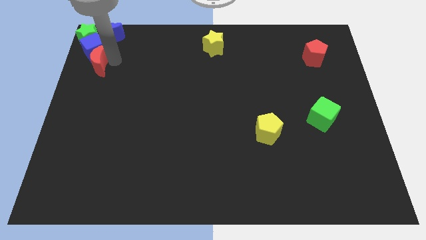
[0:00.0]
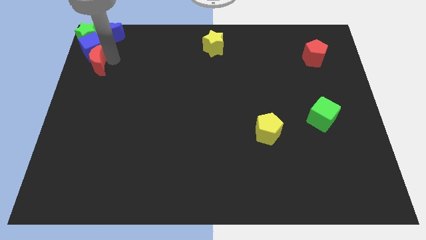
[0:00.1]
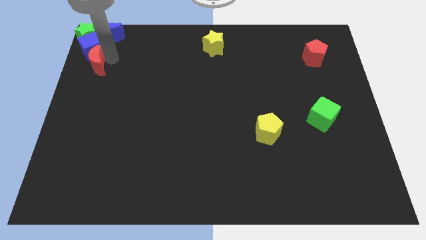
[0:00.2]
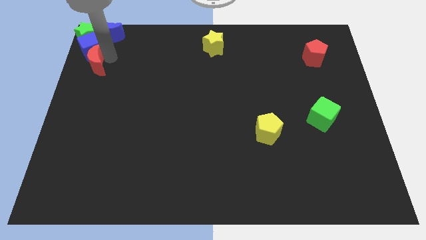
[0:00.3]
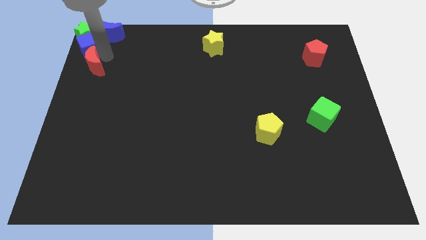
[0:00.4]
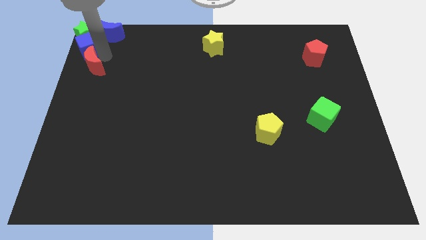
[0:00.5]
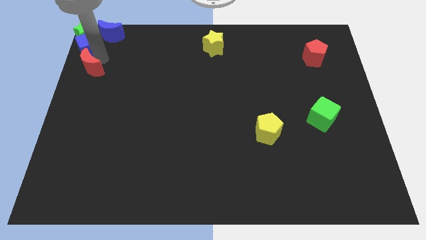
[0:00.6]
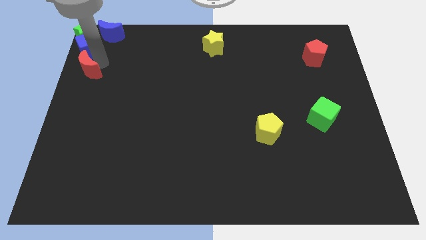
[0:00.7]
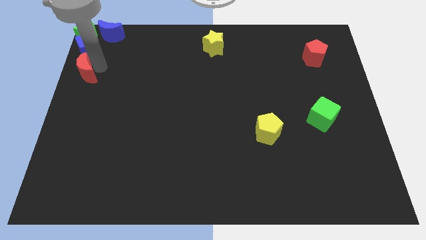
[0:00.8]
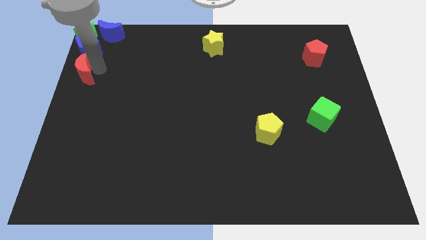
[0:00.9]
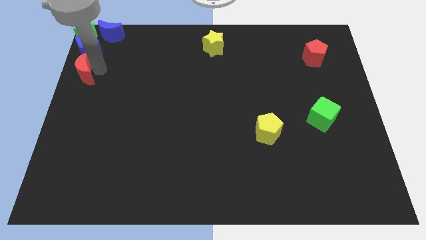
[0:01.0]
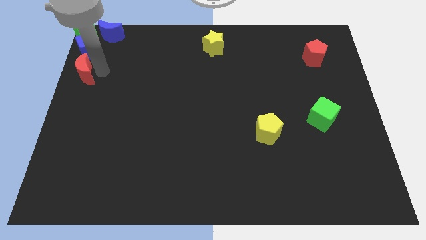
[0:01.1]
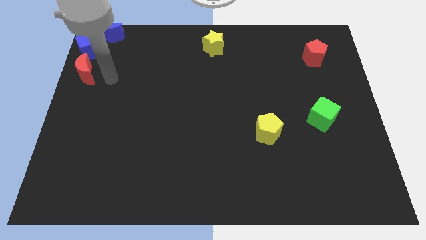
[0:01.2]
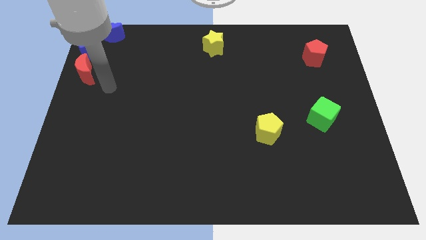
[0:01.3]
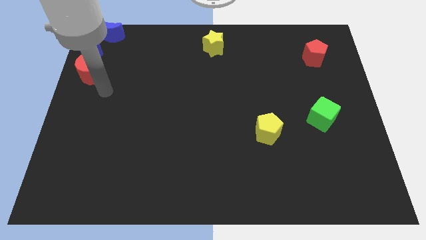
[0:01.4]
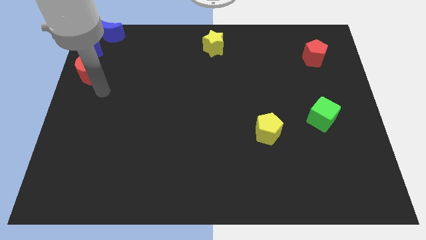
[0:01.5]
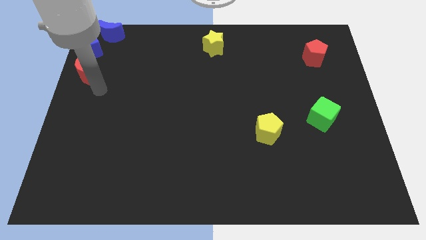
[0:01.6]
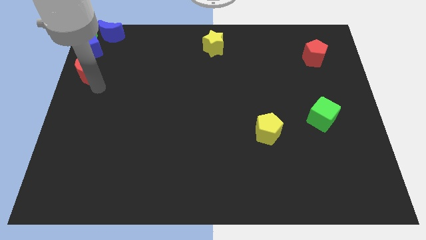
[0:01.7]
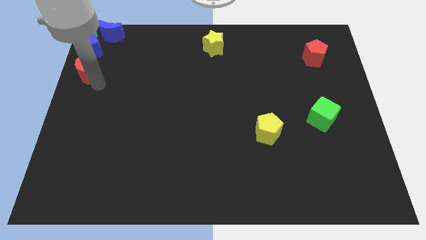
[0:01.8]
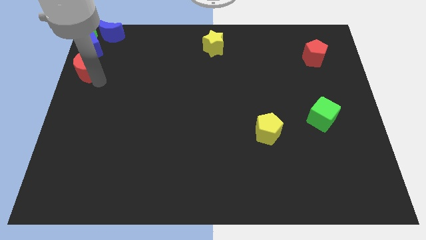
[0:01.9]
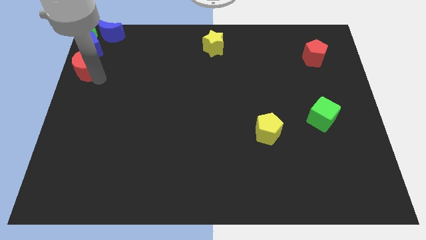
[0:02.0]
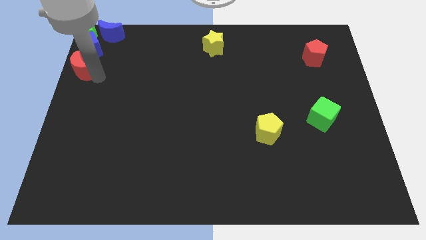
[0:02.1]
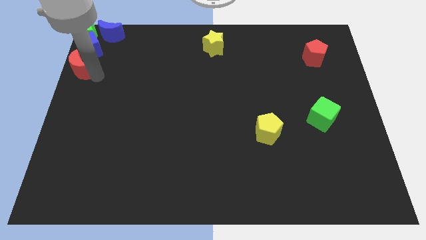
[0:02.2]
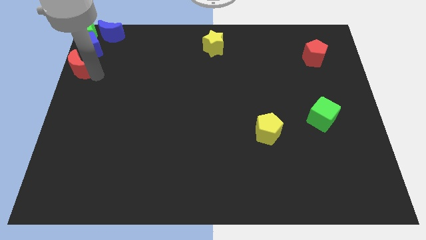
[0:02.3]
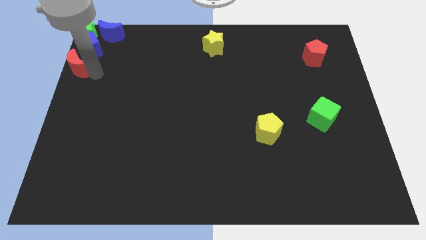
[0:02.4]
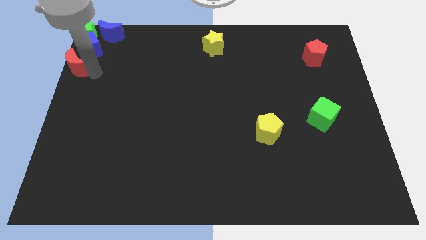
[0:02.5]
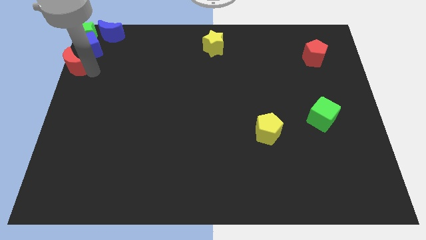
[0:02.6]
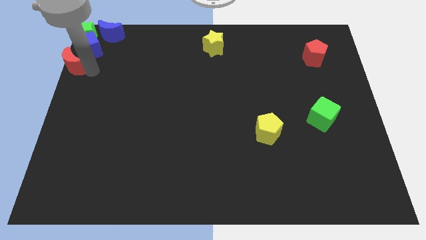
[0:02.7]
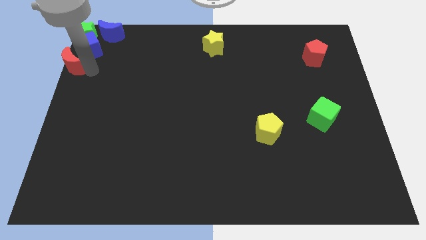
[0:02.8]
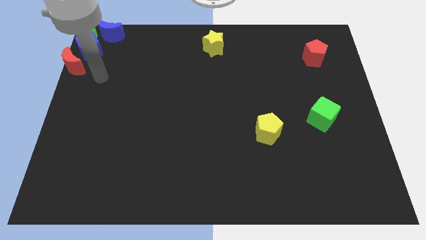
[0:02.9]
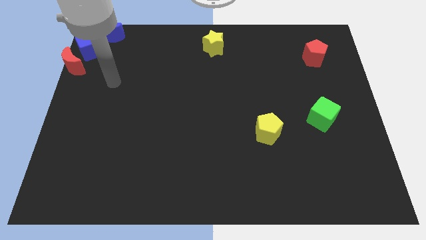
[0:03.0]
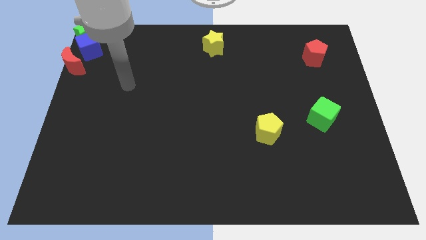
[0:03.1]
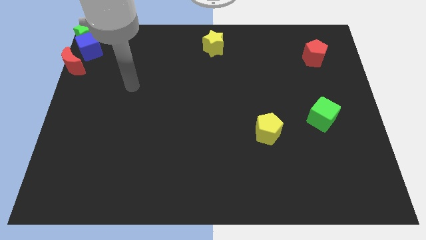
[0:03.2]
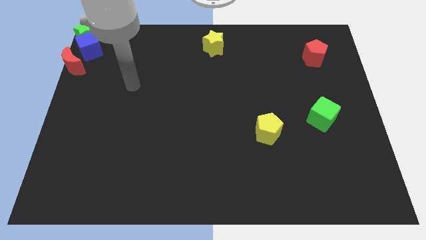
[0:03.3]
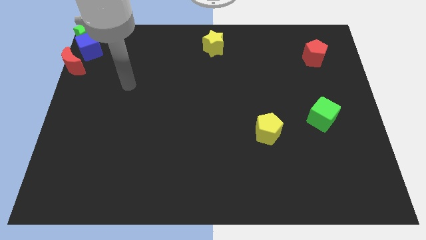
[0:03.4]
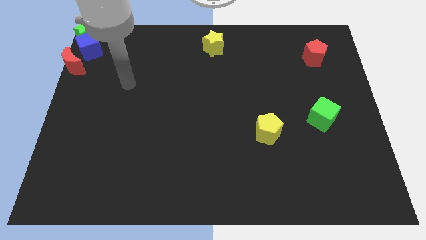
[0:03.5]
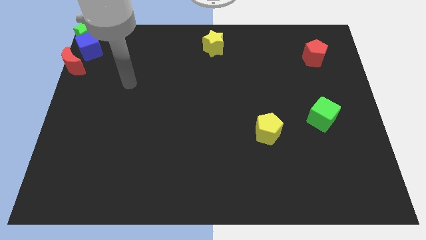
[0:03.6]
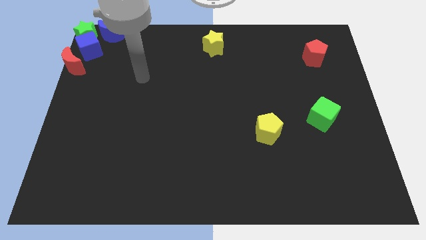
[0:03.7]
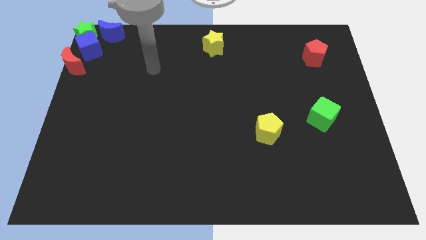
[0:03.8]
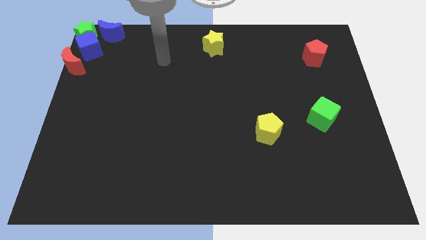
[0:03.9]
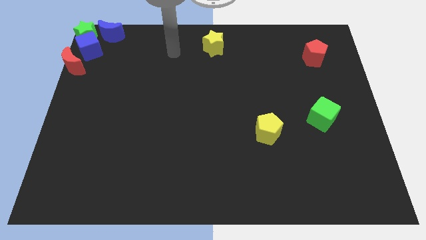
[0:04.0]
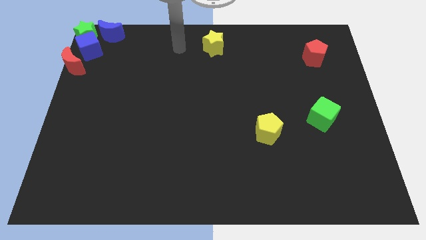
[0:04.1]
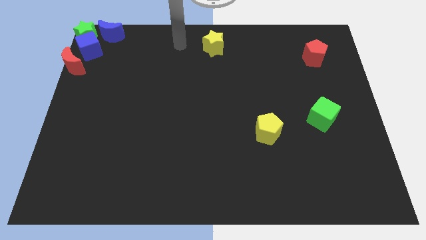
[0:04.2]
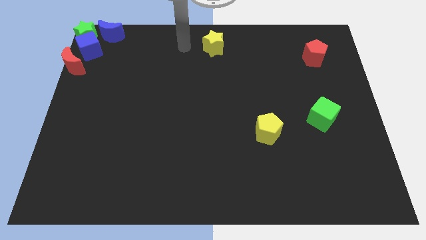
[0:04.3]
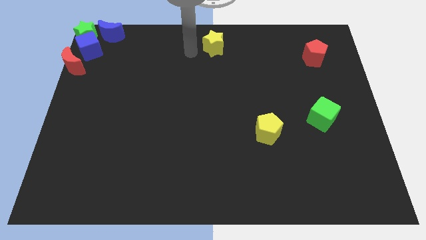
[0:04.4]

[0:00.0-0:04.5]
place red moon to the bottom left of blue cube

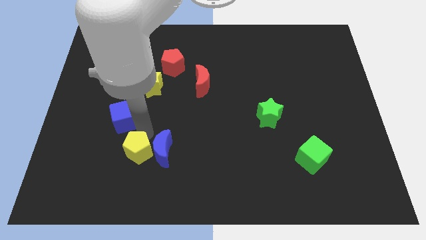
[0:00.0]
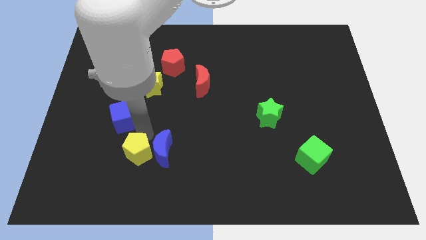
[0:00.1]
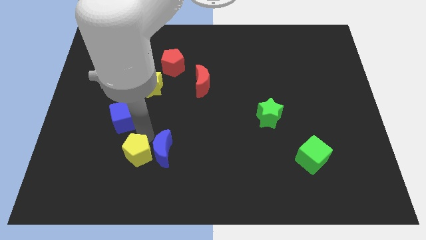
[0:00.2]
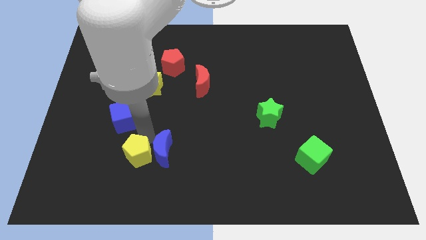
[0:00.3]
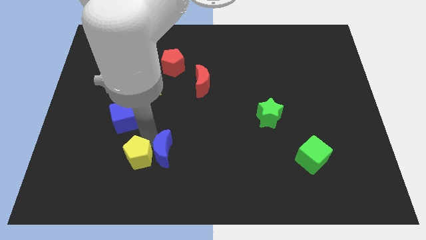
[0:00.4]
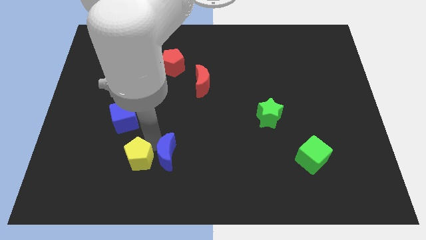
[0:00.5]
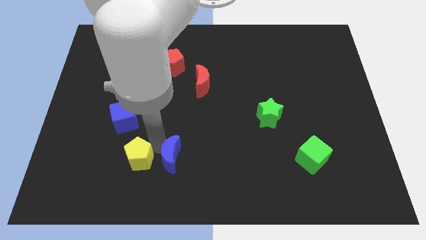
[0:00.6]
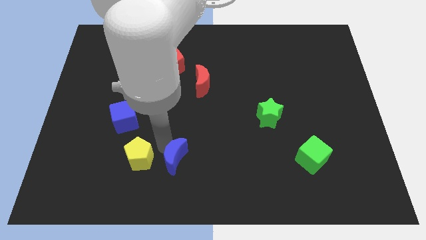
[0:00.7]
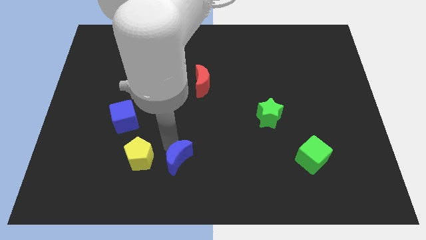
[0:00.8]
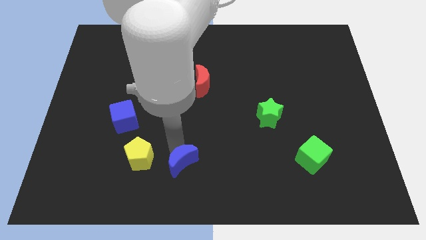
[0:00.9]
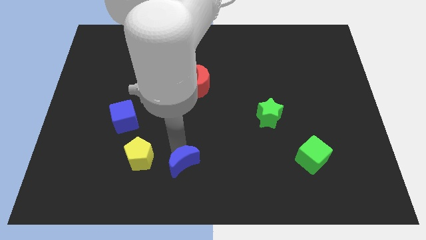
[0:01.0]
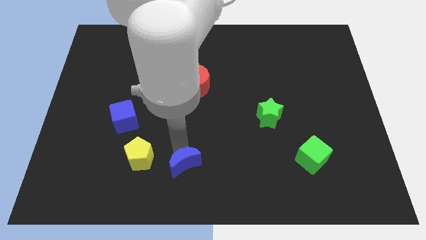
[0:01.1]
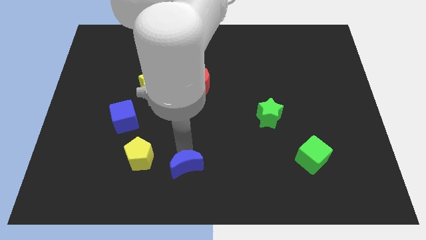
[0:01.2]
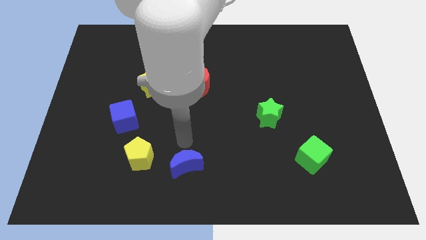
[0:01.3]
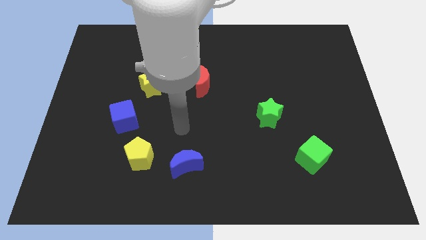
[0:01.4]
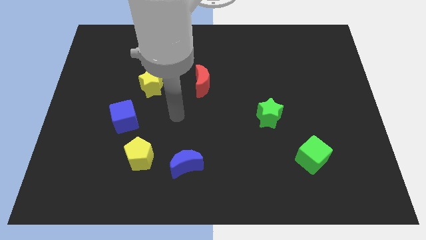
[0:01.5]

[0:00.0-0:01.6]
move blue crescent away from the yellow pentagon

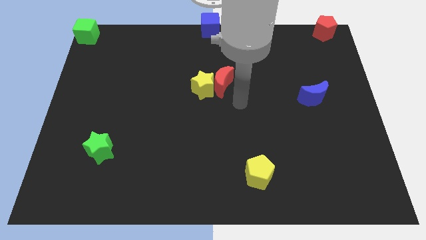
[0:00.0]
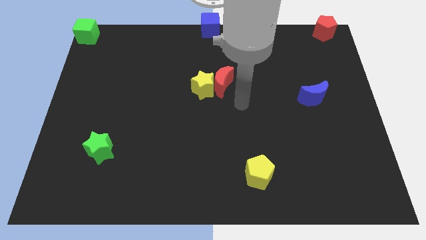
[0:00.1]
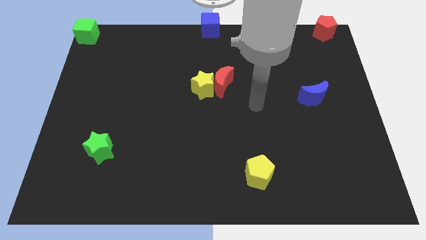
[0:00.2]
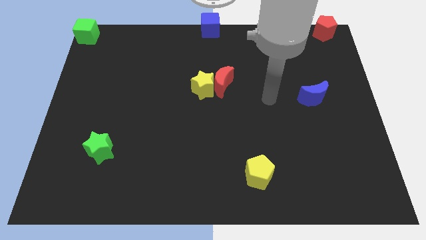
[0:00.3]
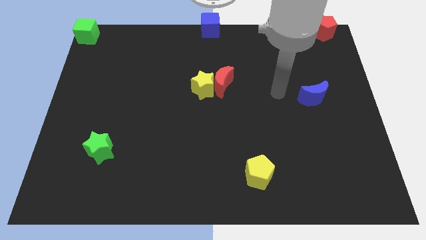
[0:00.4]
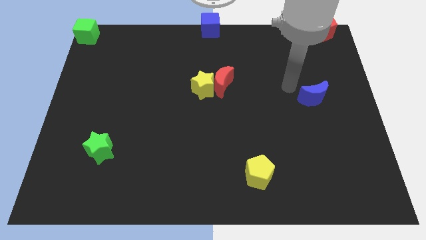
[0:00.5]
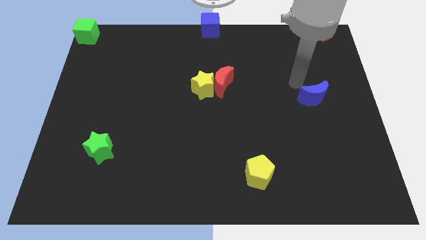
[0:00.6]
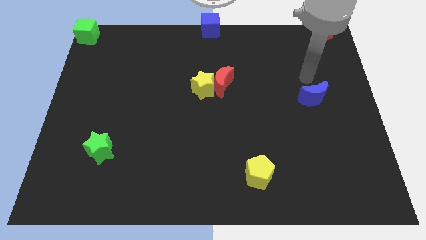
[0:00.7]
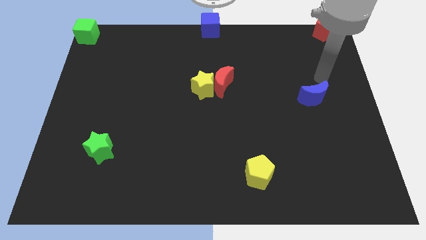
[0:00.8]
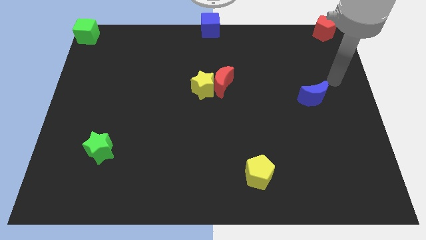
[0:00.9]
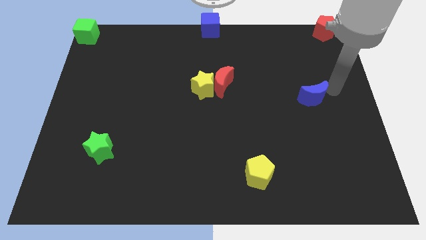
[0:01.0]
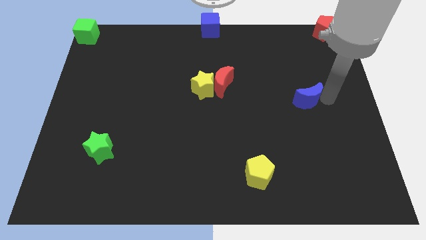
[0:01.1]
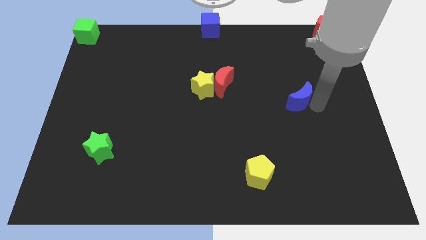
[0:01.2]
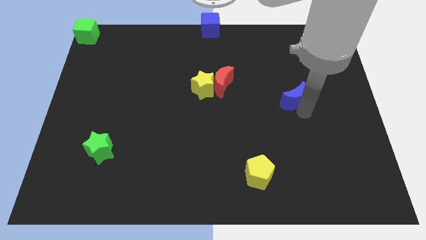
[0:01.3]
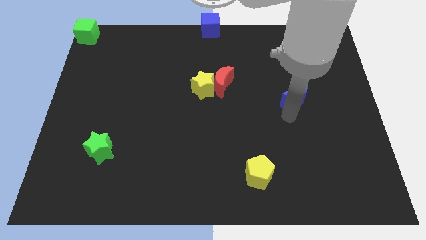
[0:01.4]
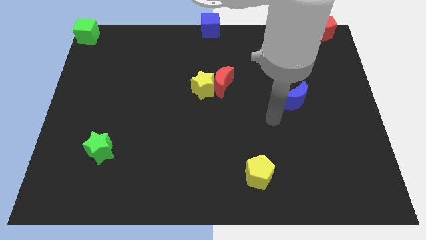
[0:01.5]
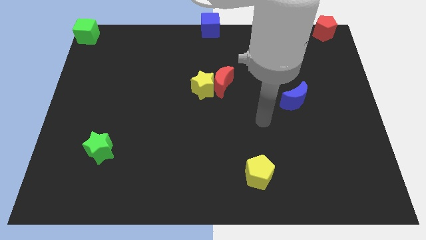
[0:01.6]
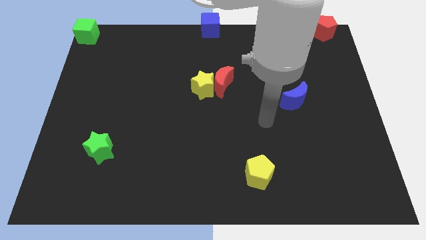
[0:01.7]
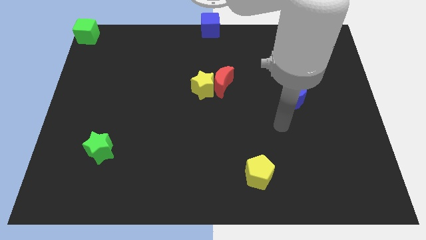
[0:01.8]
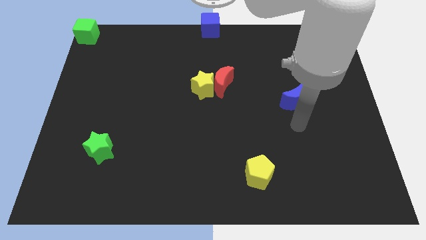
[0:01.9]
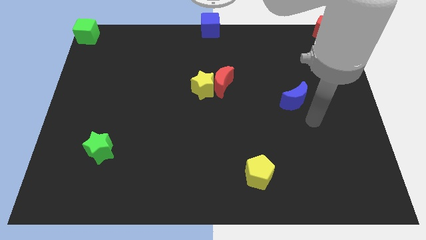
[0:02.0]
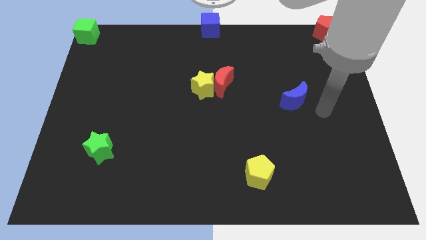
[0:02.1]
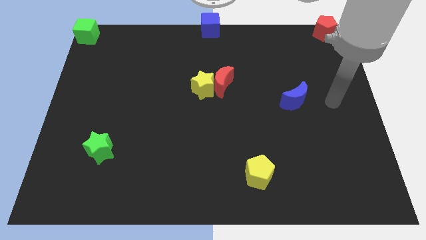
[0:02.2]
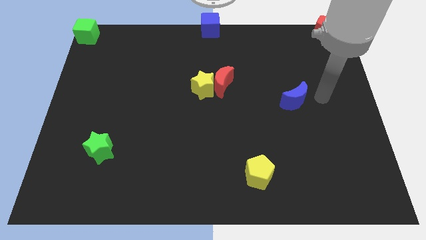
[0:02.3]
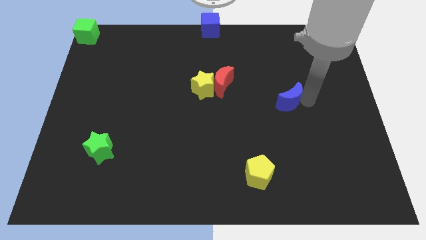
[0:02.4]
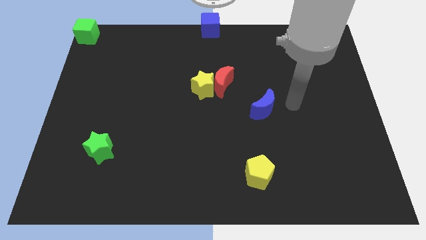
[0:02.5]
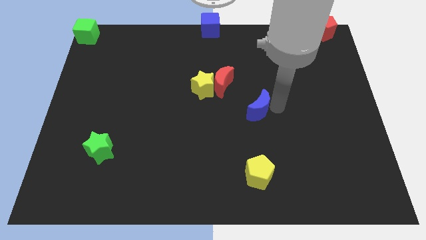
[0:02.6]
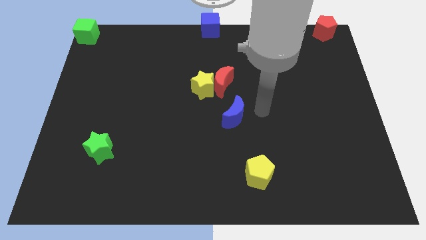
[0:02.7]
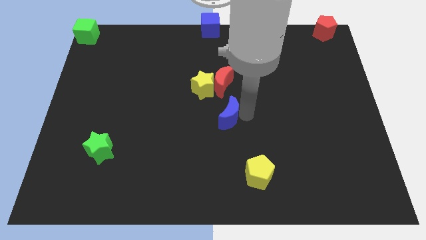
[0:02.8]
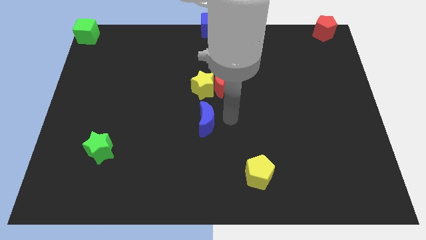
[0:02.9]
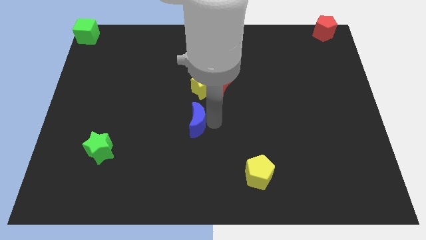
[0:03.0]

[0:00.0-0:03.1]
place the blue crescent towards the bottom of the yellow star
